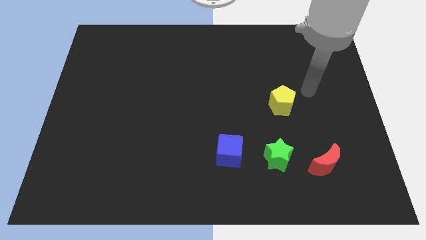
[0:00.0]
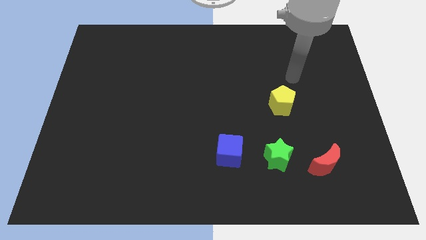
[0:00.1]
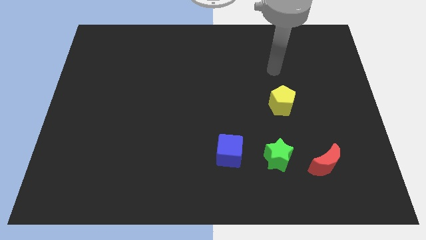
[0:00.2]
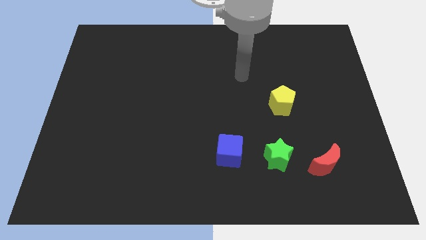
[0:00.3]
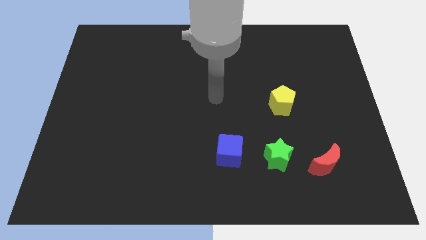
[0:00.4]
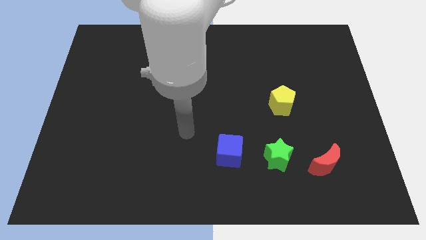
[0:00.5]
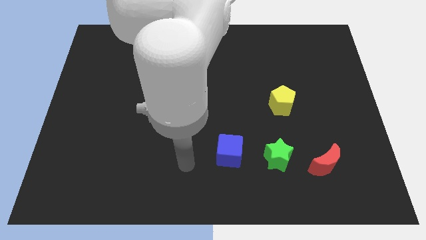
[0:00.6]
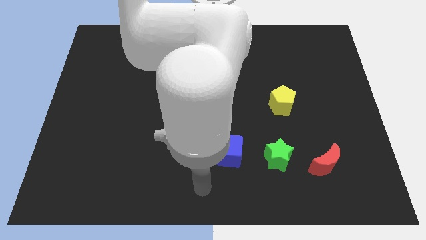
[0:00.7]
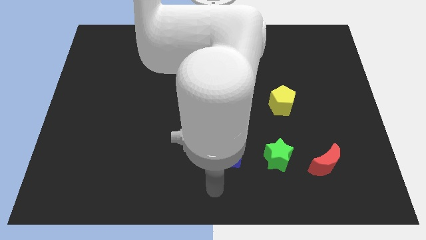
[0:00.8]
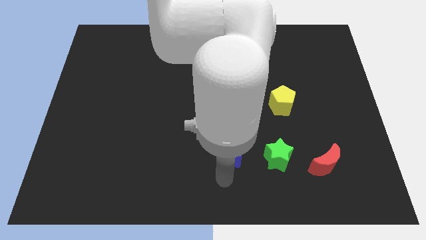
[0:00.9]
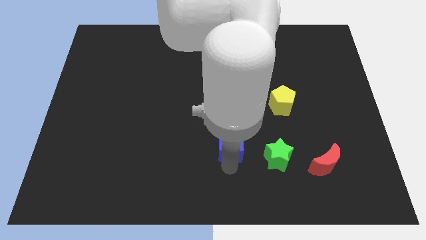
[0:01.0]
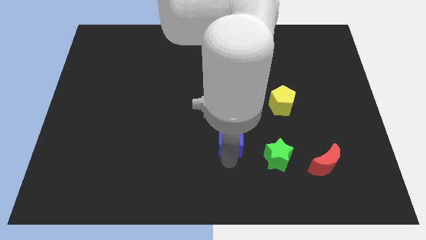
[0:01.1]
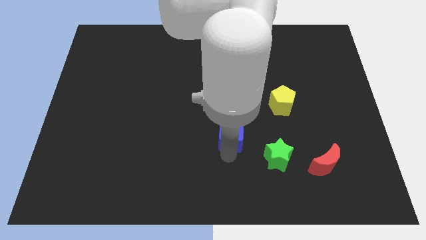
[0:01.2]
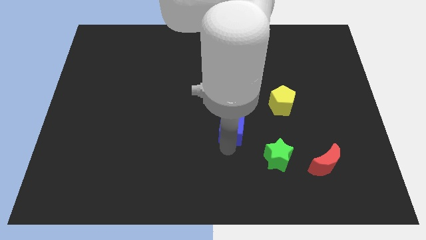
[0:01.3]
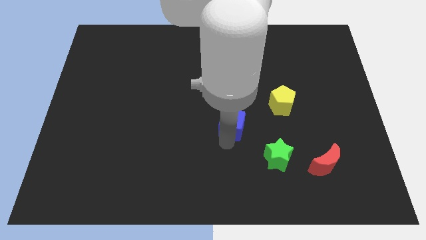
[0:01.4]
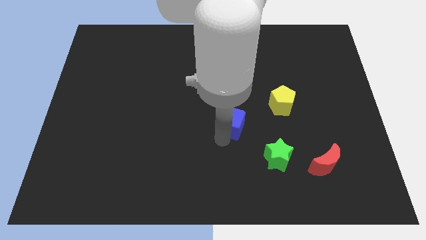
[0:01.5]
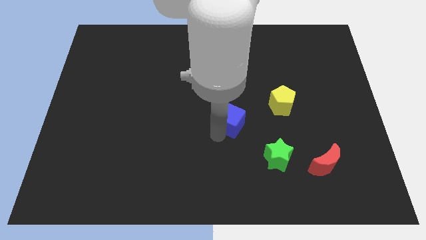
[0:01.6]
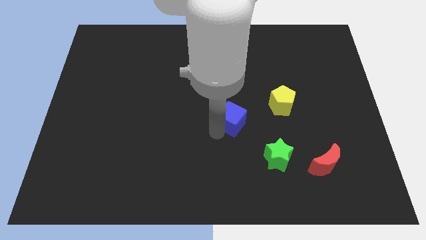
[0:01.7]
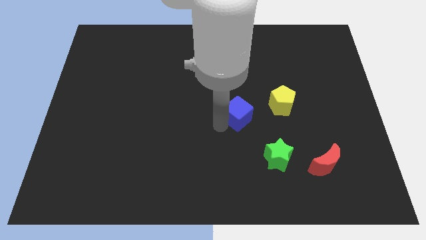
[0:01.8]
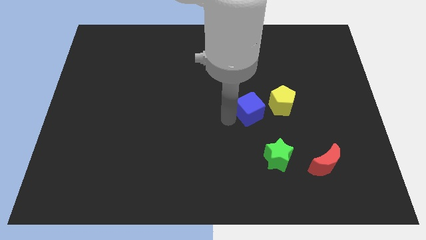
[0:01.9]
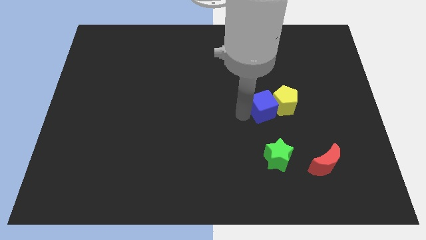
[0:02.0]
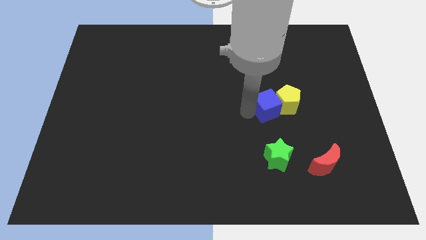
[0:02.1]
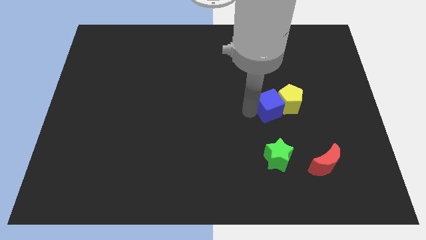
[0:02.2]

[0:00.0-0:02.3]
push the blue block next to the pentagon

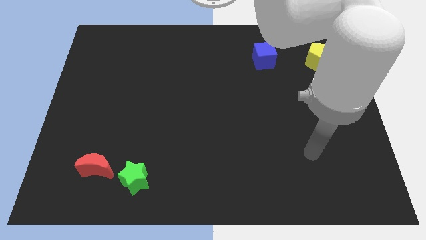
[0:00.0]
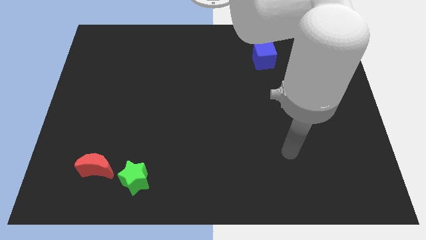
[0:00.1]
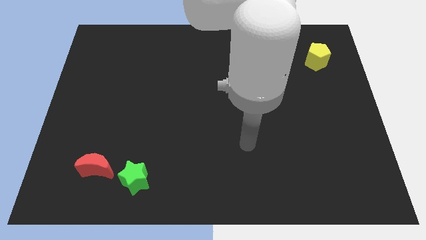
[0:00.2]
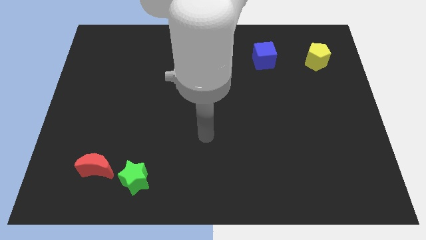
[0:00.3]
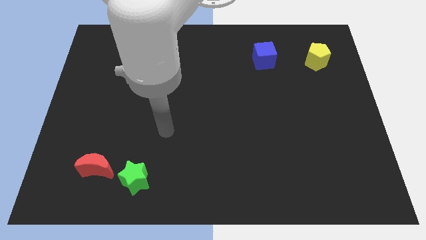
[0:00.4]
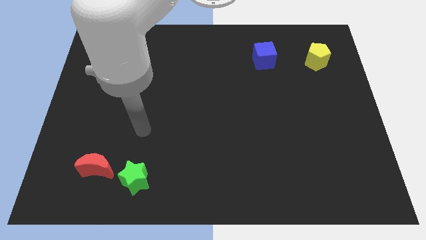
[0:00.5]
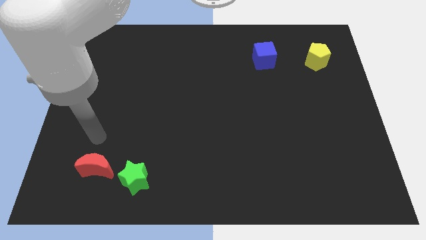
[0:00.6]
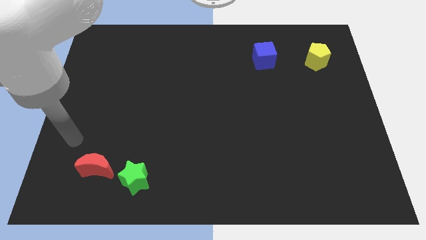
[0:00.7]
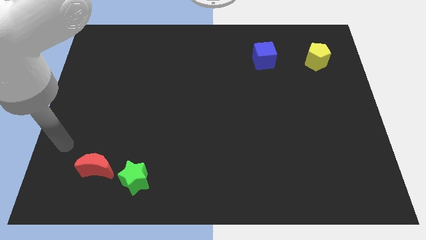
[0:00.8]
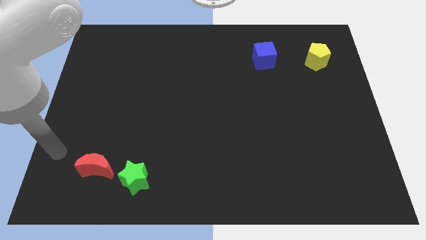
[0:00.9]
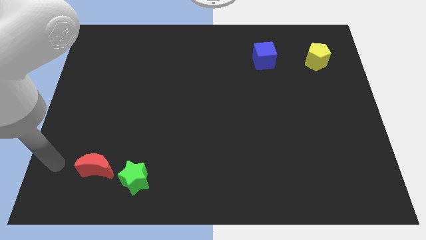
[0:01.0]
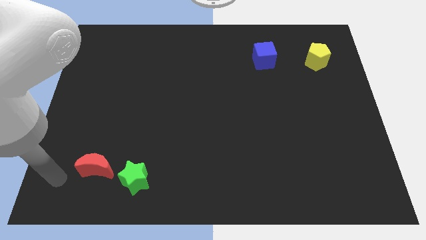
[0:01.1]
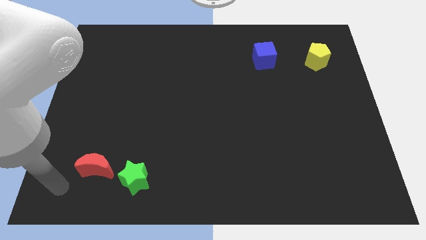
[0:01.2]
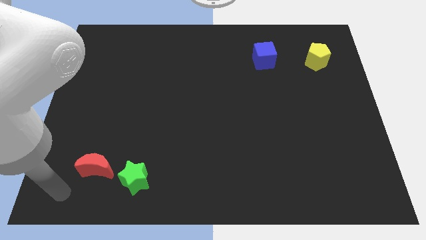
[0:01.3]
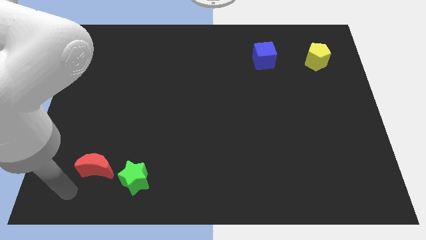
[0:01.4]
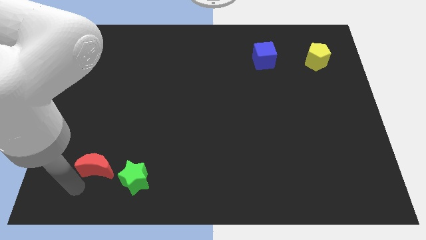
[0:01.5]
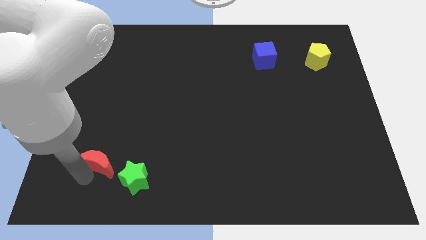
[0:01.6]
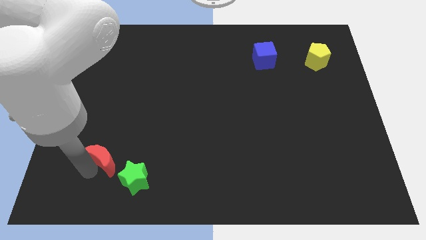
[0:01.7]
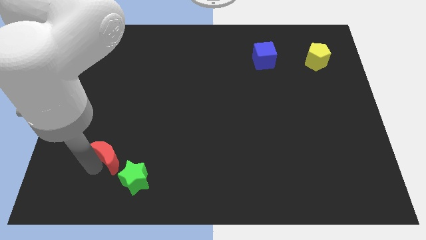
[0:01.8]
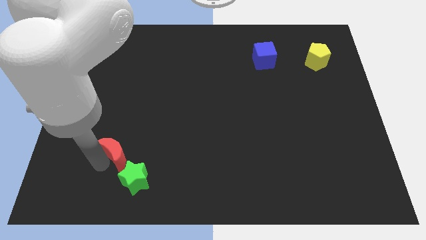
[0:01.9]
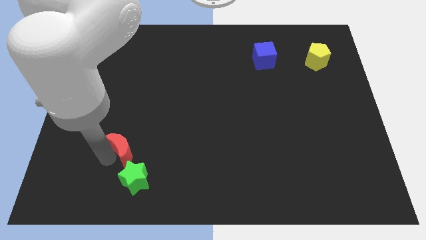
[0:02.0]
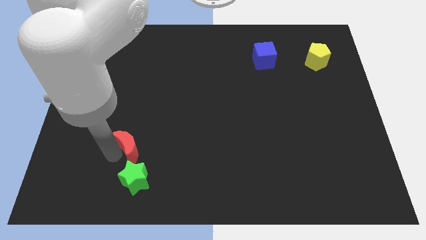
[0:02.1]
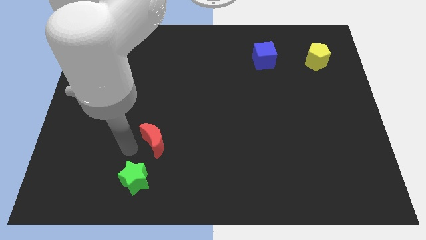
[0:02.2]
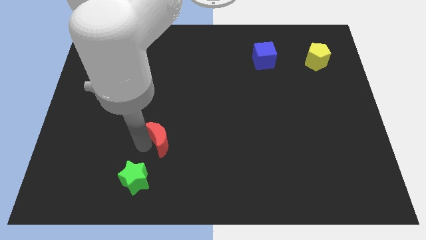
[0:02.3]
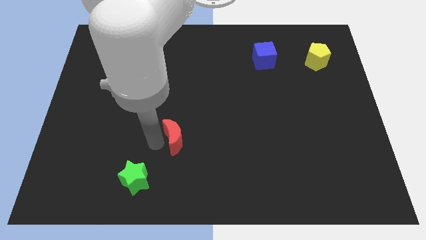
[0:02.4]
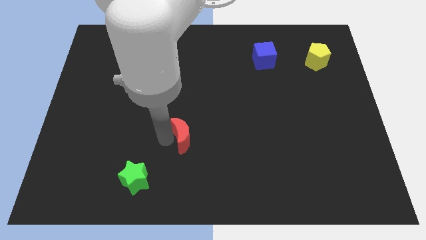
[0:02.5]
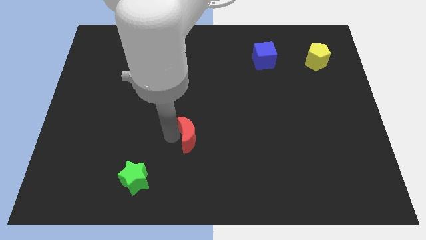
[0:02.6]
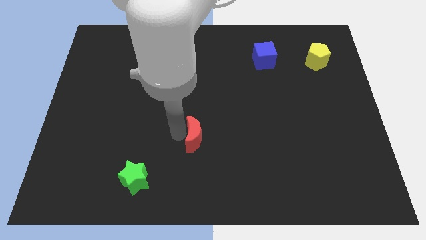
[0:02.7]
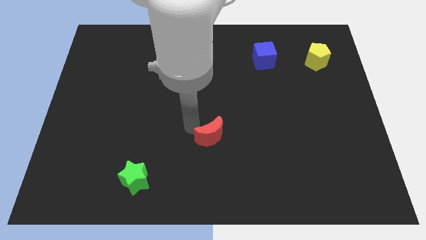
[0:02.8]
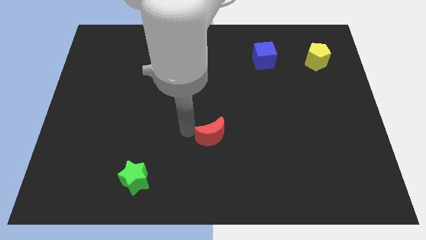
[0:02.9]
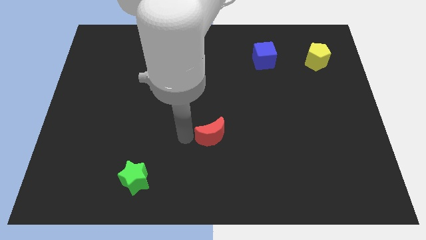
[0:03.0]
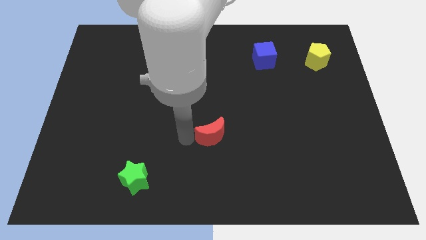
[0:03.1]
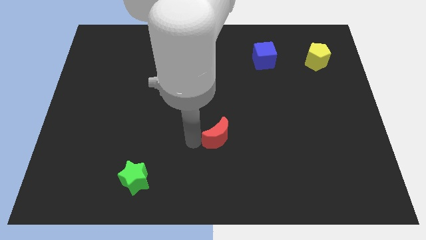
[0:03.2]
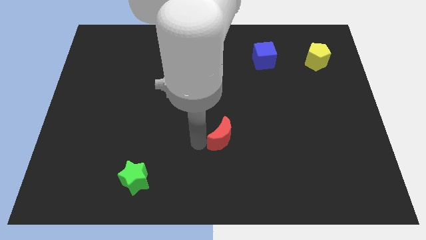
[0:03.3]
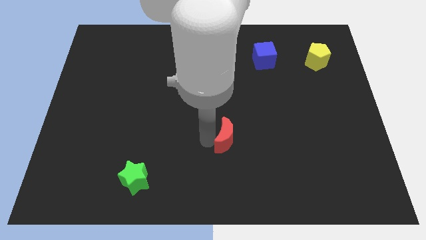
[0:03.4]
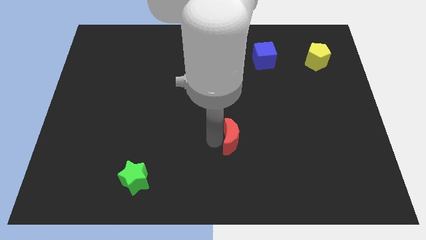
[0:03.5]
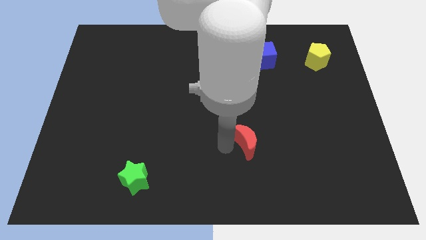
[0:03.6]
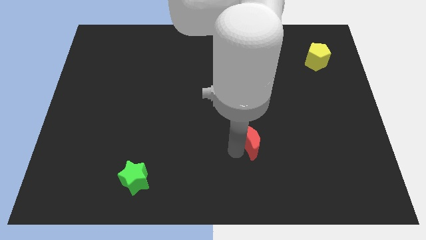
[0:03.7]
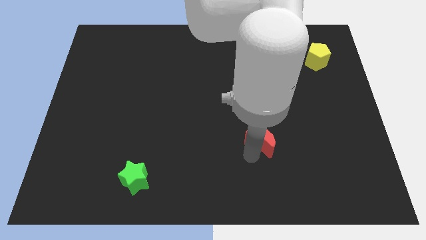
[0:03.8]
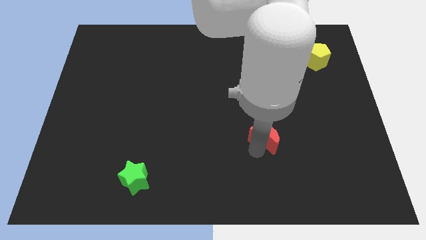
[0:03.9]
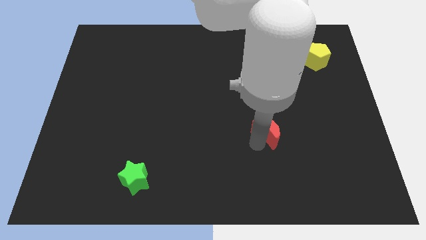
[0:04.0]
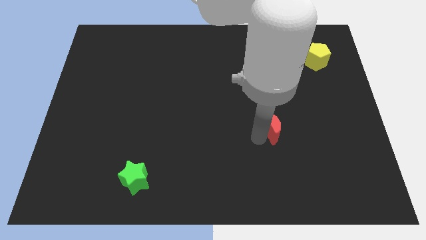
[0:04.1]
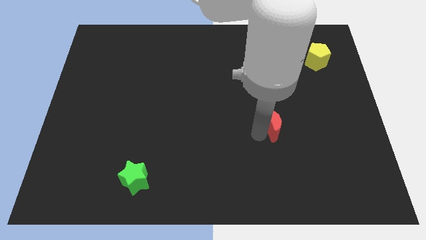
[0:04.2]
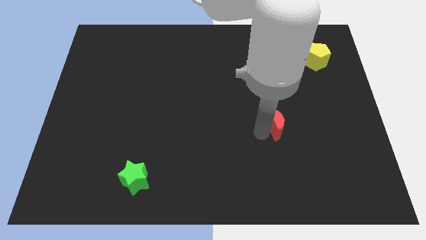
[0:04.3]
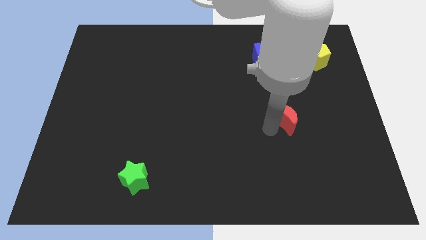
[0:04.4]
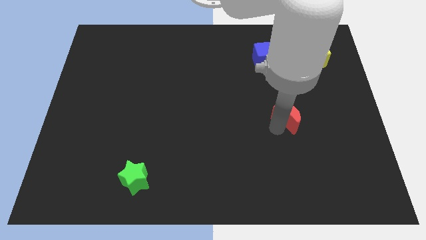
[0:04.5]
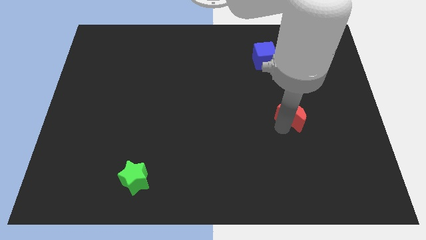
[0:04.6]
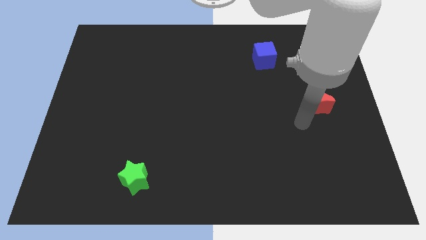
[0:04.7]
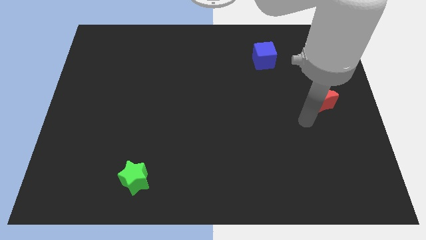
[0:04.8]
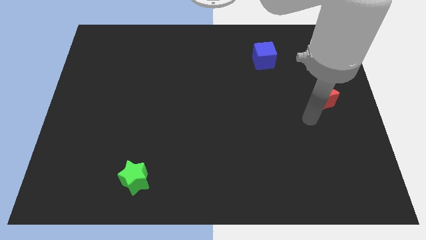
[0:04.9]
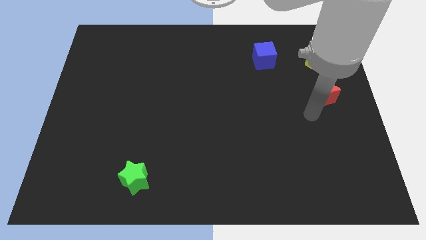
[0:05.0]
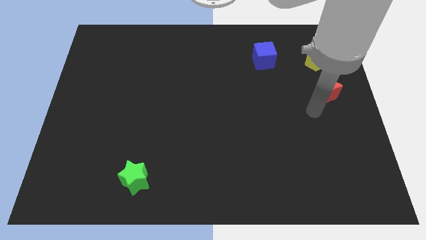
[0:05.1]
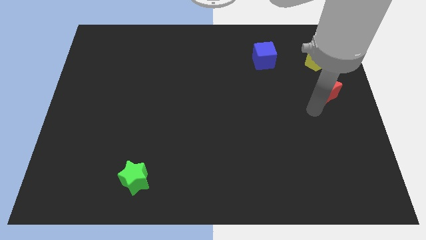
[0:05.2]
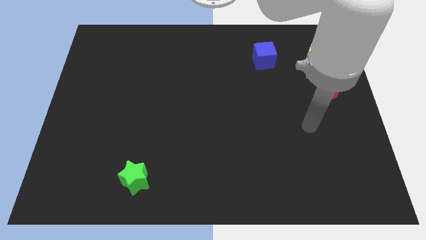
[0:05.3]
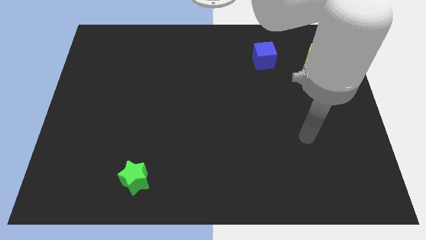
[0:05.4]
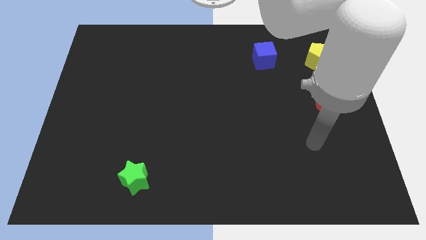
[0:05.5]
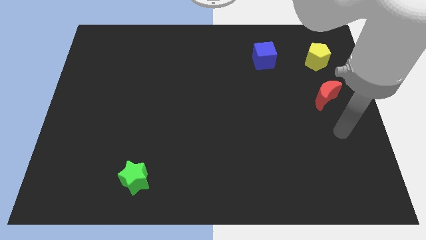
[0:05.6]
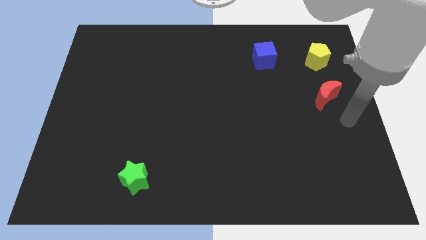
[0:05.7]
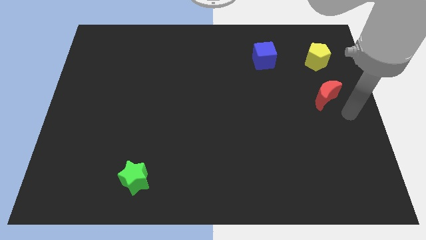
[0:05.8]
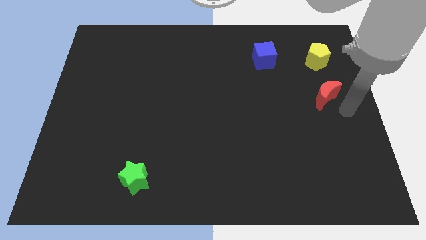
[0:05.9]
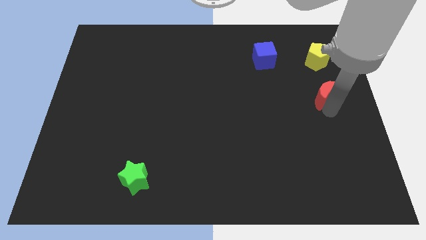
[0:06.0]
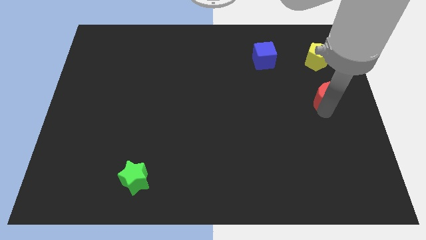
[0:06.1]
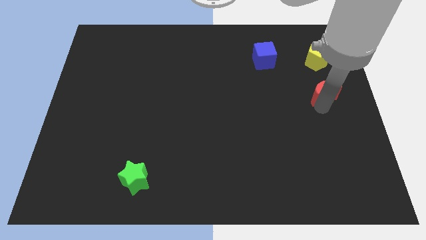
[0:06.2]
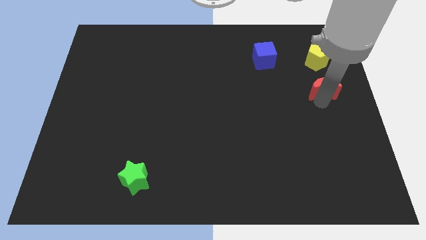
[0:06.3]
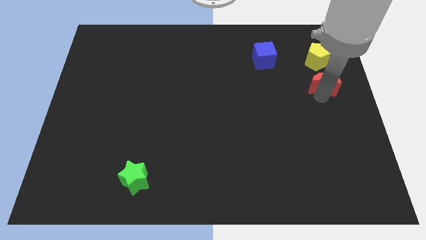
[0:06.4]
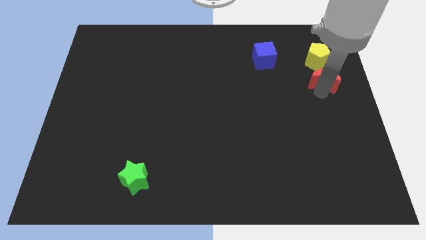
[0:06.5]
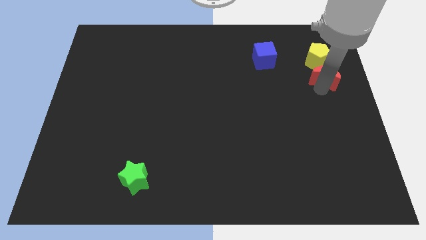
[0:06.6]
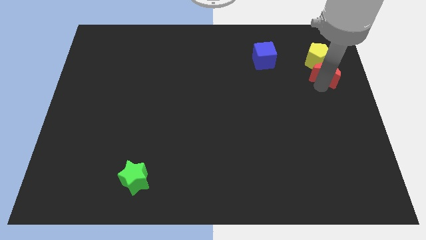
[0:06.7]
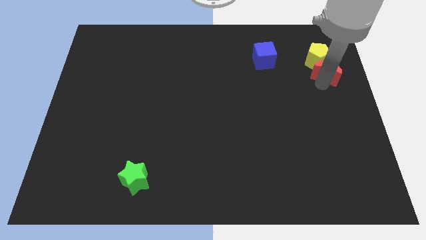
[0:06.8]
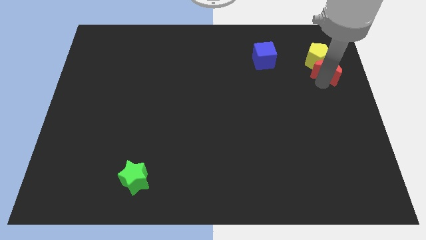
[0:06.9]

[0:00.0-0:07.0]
slide the red moon close to the pentagon
